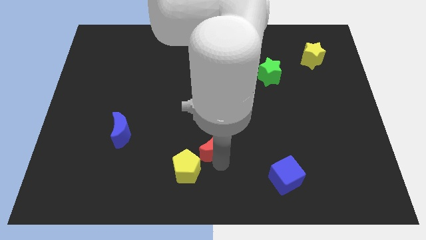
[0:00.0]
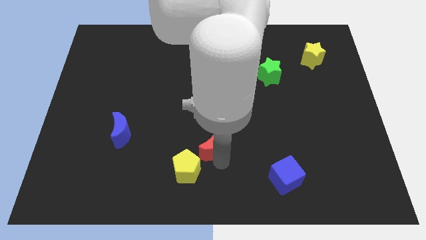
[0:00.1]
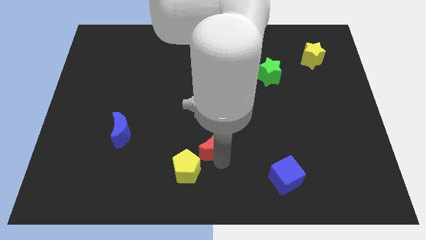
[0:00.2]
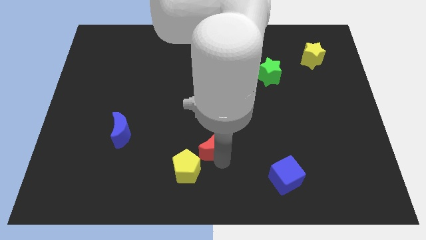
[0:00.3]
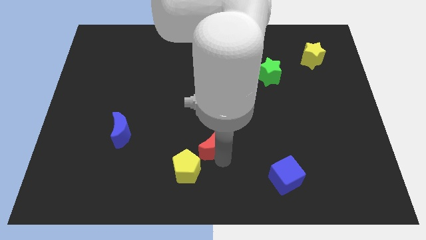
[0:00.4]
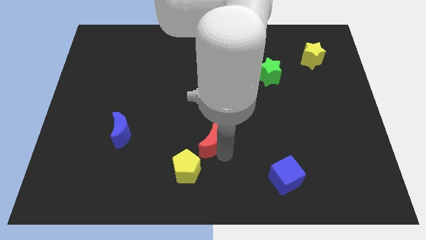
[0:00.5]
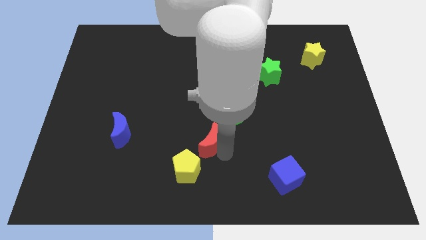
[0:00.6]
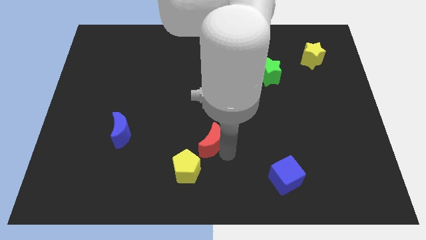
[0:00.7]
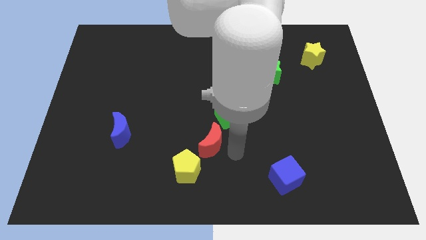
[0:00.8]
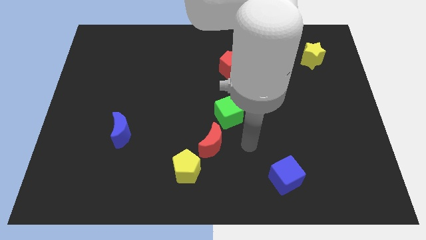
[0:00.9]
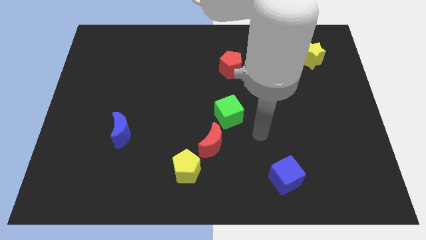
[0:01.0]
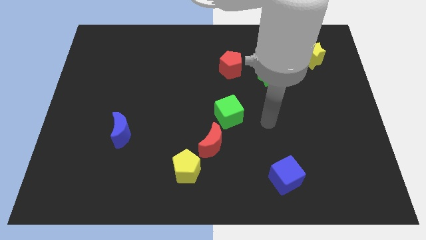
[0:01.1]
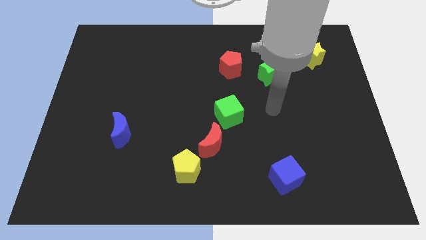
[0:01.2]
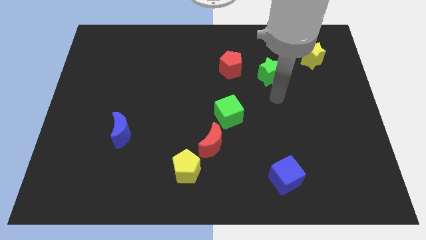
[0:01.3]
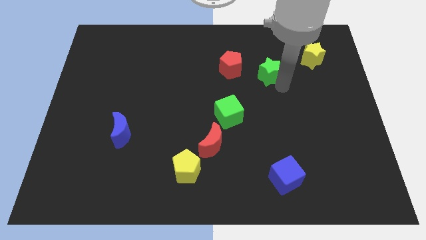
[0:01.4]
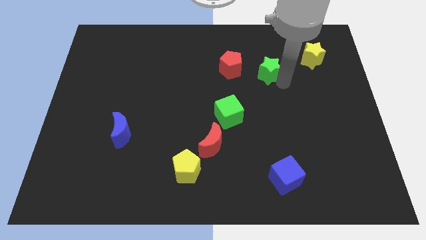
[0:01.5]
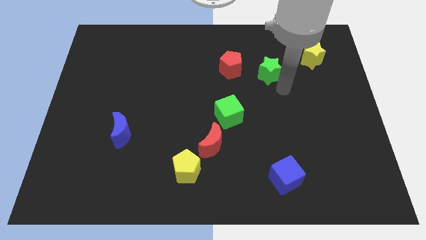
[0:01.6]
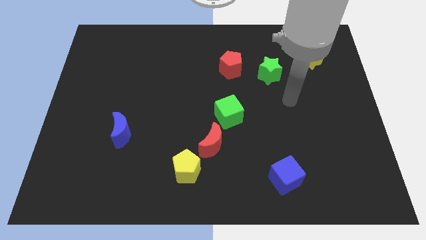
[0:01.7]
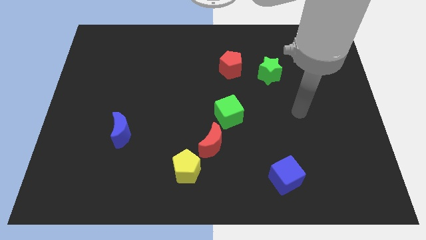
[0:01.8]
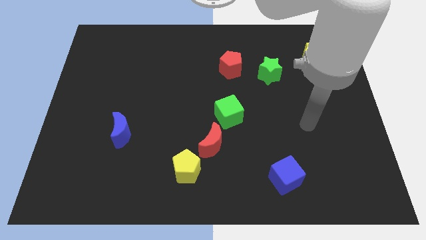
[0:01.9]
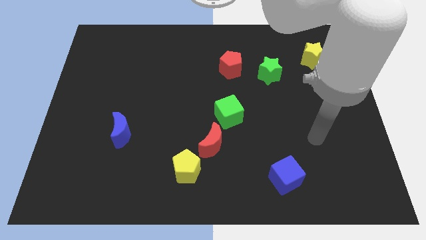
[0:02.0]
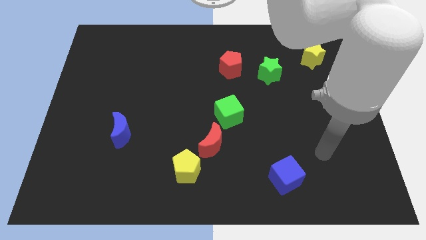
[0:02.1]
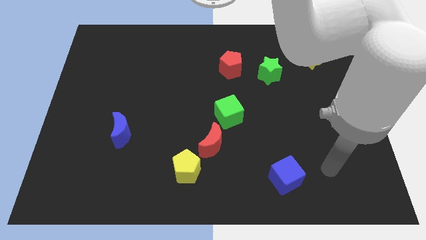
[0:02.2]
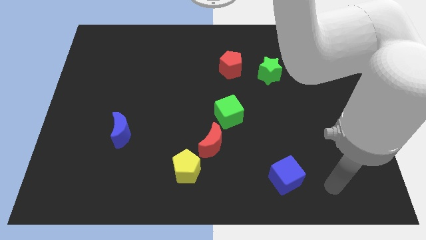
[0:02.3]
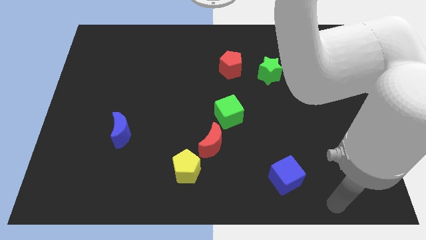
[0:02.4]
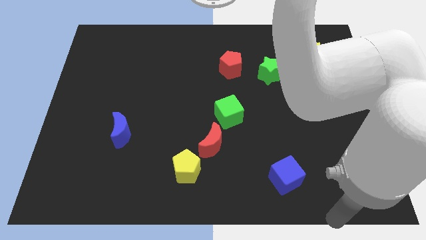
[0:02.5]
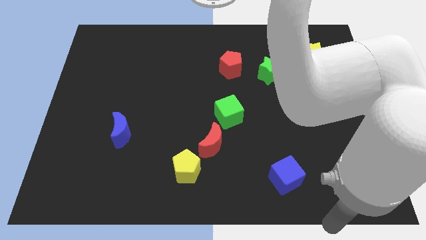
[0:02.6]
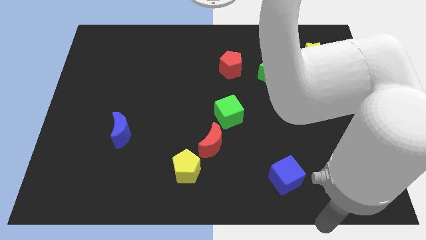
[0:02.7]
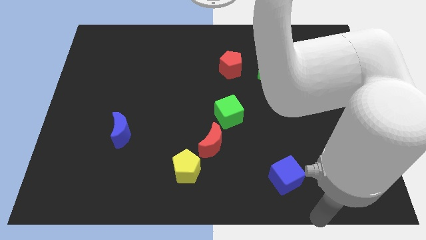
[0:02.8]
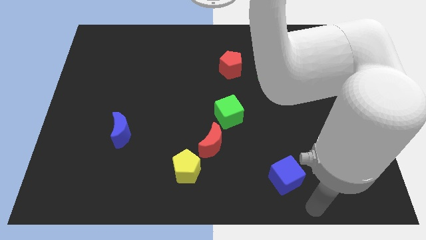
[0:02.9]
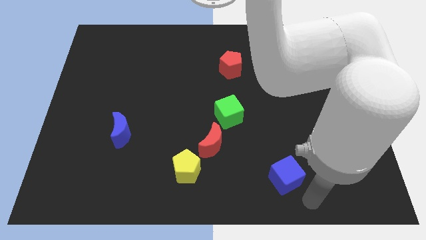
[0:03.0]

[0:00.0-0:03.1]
place the arm diagonal to the blue cube

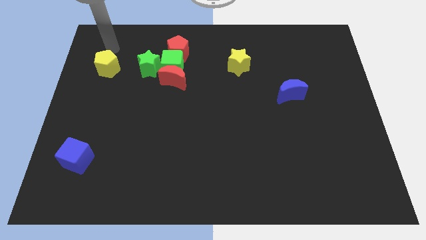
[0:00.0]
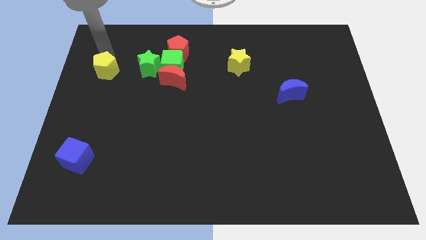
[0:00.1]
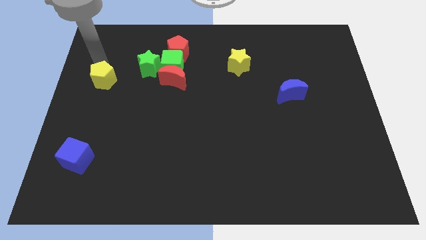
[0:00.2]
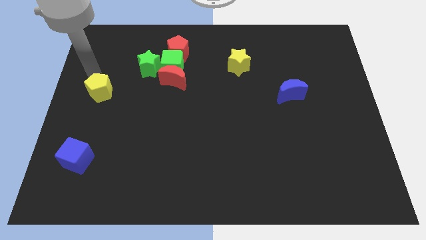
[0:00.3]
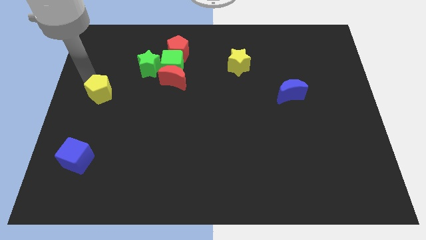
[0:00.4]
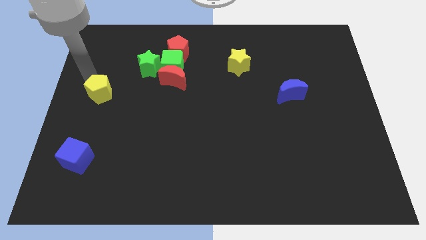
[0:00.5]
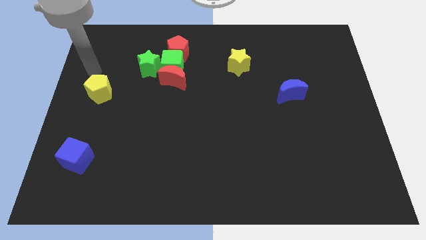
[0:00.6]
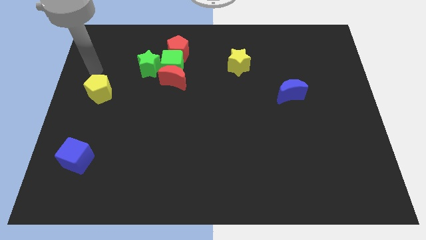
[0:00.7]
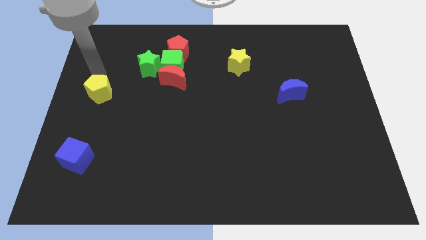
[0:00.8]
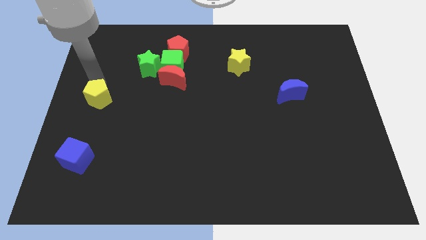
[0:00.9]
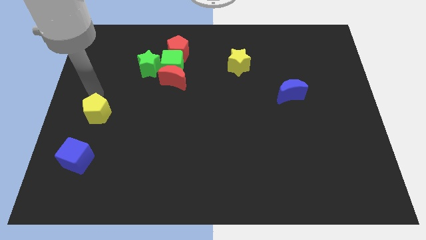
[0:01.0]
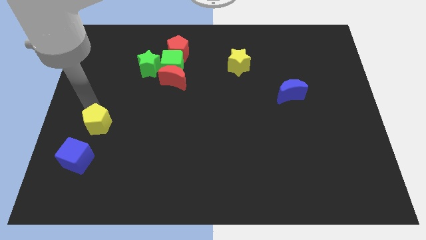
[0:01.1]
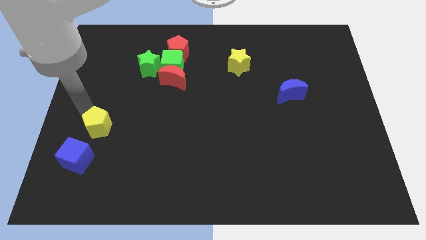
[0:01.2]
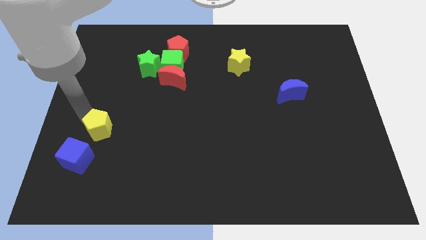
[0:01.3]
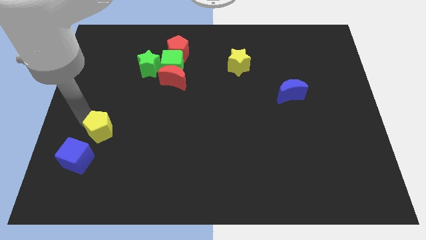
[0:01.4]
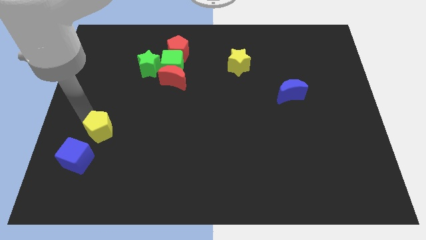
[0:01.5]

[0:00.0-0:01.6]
push the yellow pentagon downward

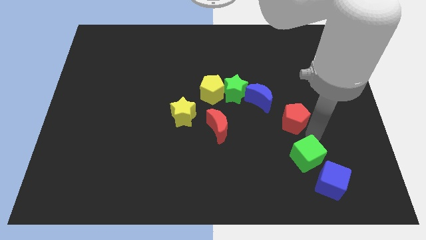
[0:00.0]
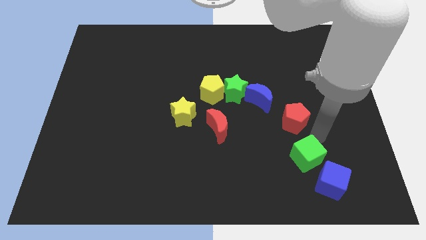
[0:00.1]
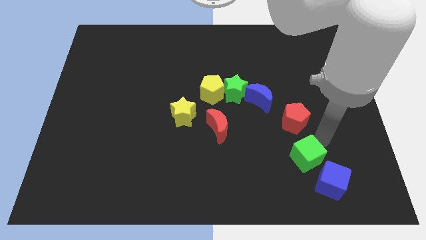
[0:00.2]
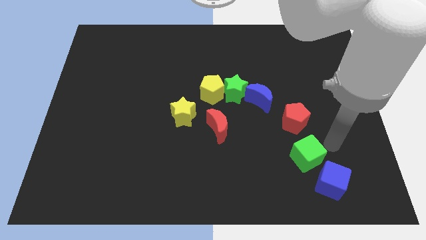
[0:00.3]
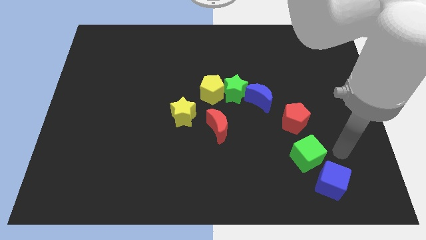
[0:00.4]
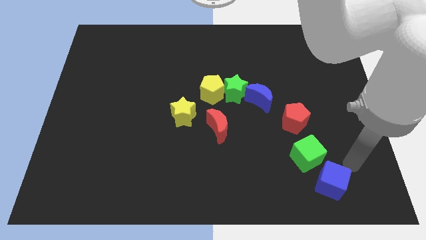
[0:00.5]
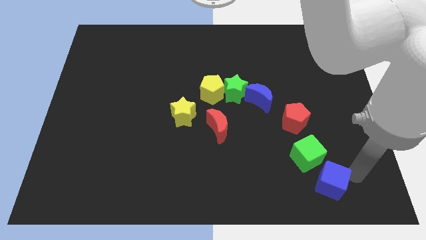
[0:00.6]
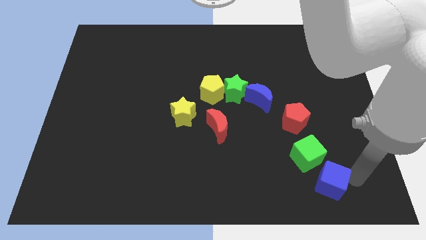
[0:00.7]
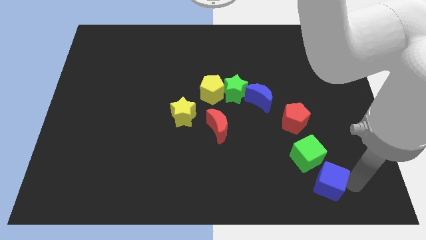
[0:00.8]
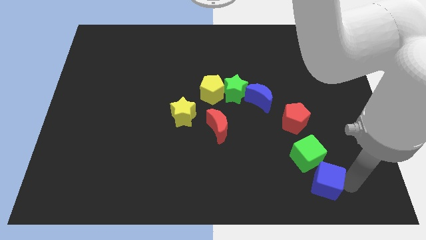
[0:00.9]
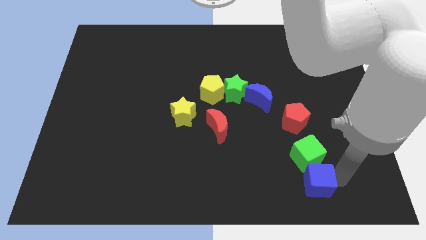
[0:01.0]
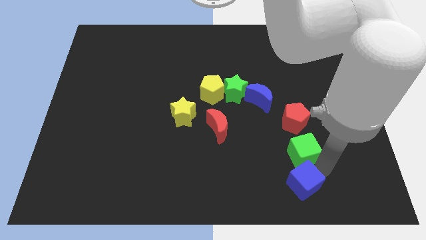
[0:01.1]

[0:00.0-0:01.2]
push the blue cube to the bottom of the green cube

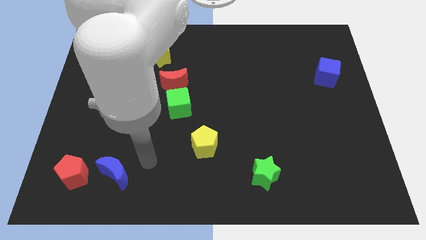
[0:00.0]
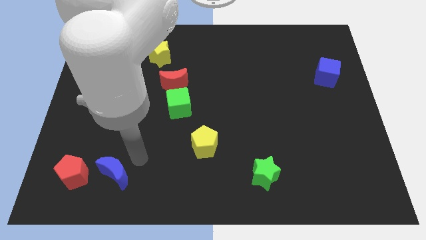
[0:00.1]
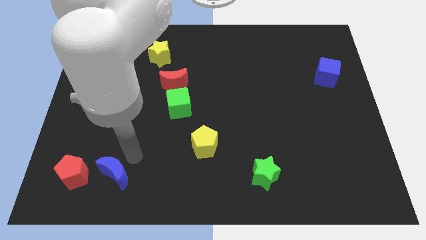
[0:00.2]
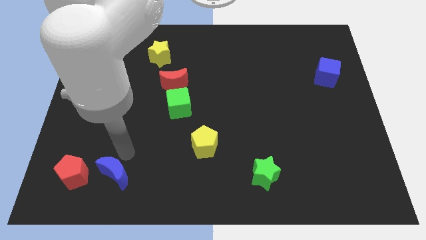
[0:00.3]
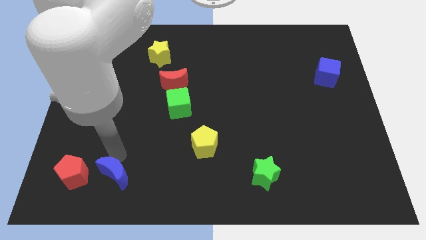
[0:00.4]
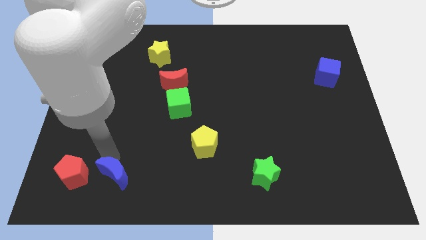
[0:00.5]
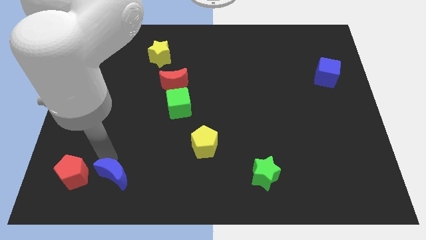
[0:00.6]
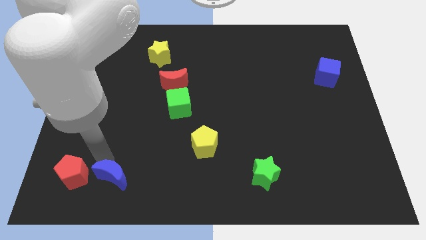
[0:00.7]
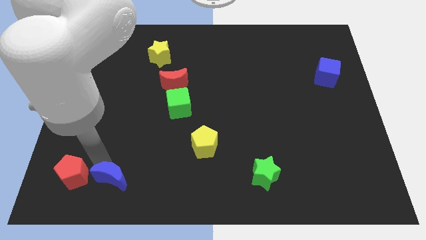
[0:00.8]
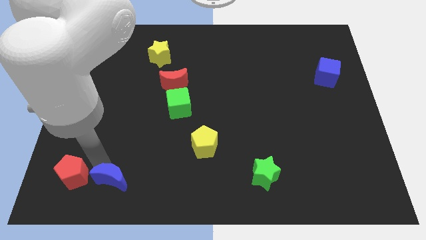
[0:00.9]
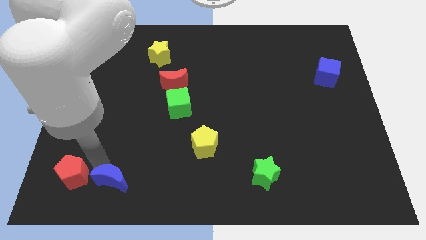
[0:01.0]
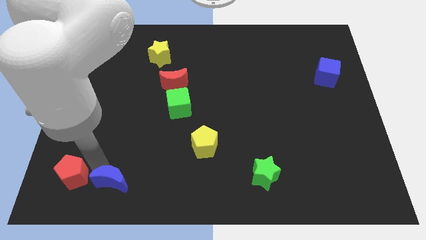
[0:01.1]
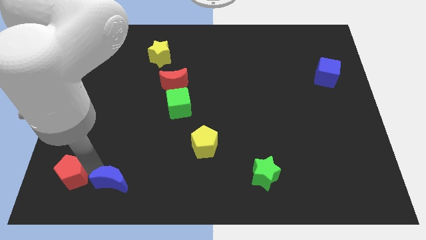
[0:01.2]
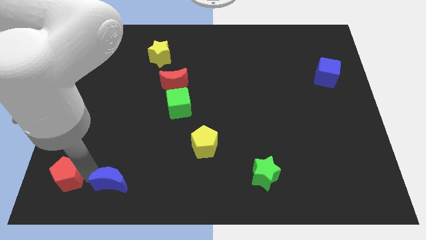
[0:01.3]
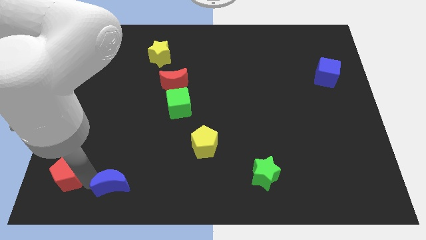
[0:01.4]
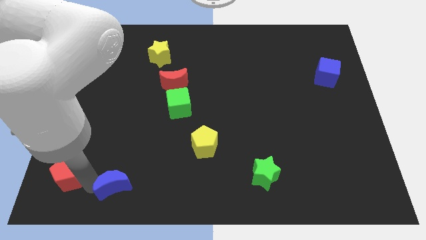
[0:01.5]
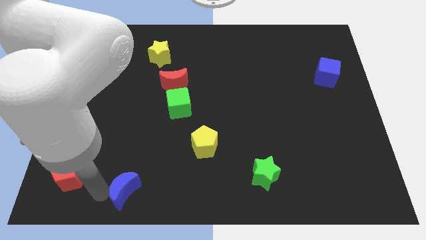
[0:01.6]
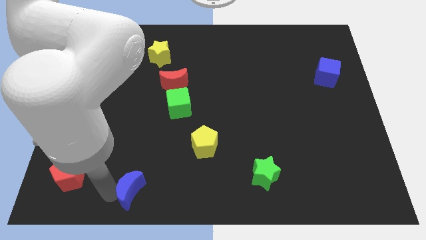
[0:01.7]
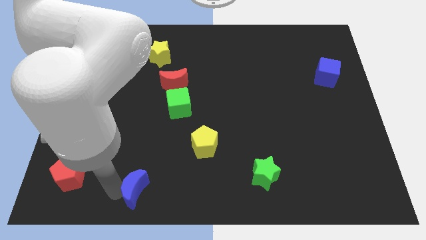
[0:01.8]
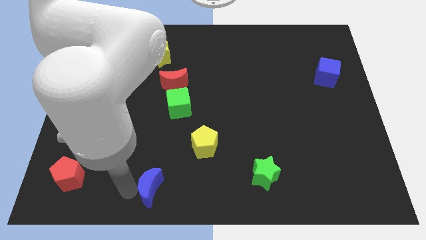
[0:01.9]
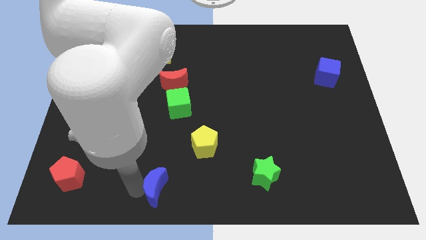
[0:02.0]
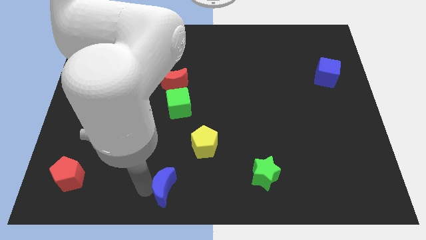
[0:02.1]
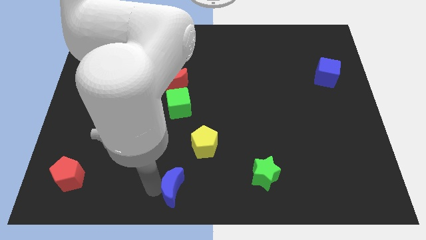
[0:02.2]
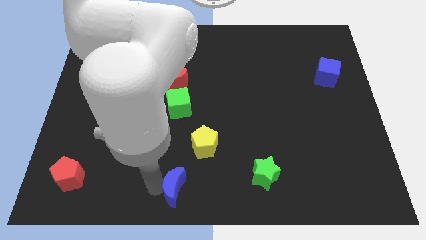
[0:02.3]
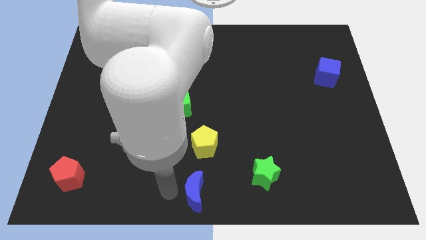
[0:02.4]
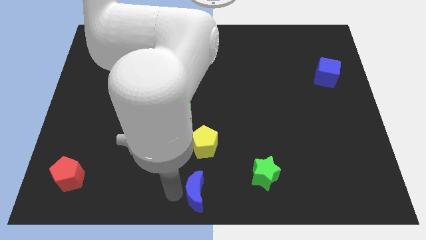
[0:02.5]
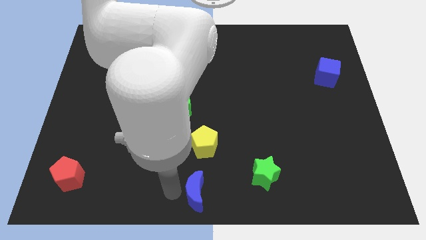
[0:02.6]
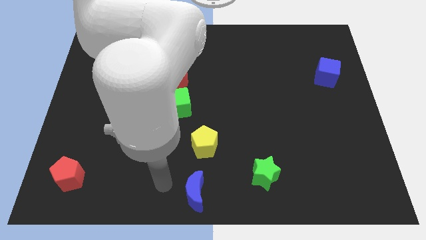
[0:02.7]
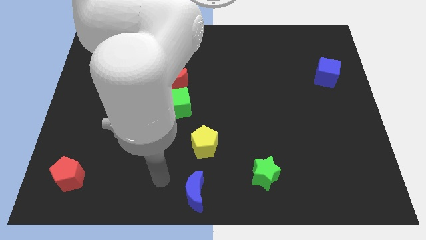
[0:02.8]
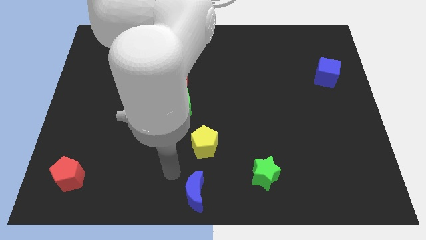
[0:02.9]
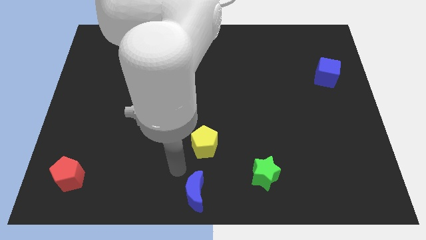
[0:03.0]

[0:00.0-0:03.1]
push blue moon towards bottom center
